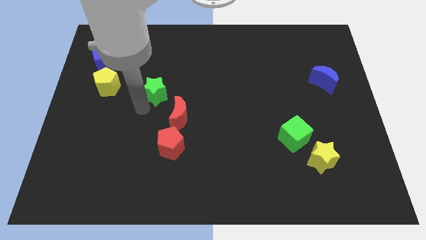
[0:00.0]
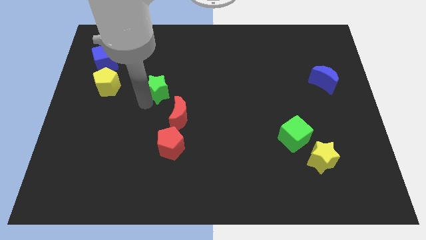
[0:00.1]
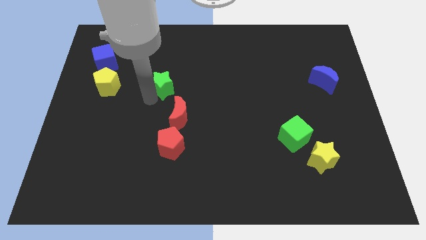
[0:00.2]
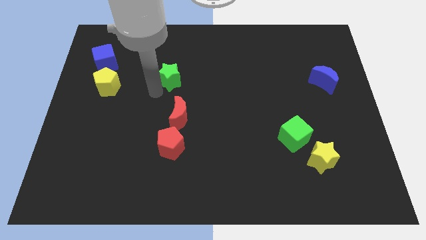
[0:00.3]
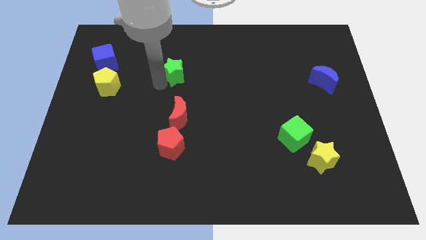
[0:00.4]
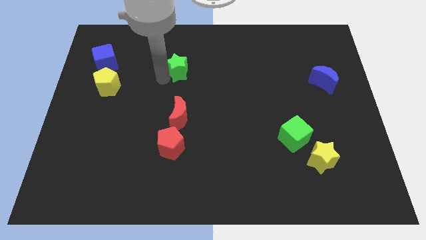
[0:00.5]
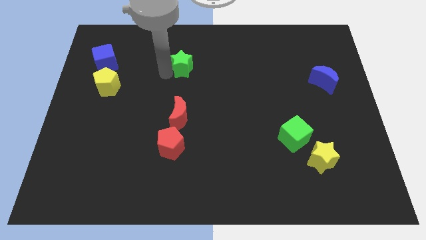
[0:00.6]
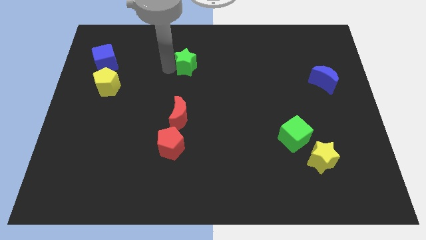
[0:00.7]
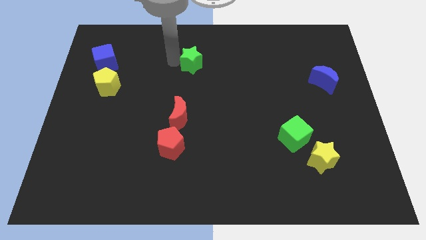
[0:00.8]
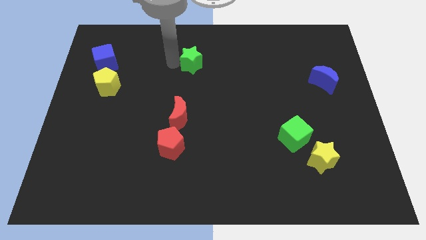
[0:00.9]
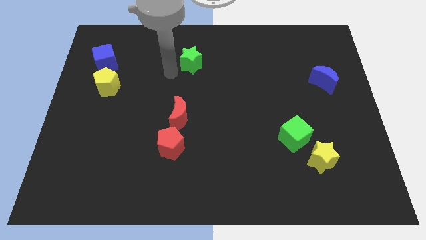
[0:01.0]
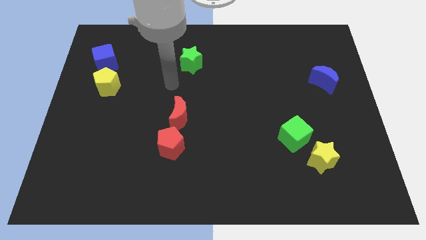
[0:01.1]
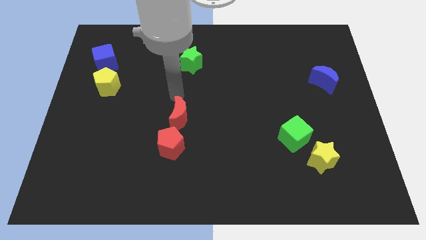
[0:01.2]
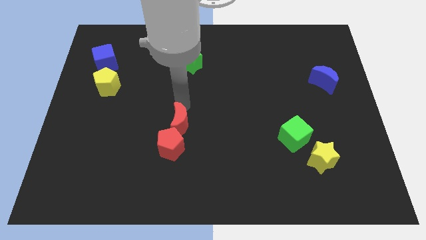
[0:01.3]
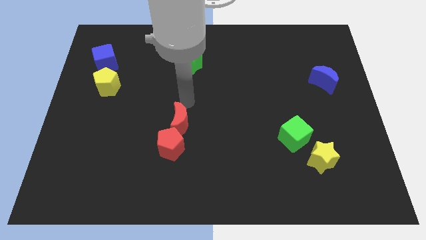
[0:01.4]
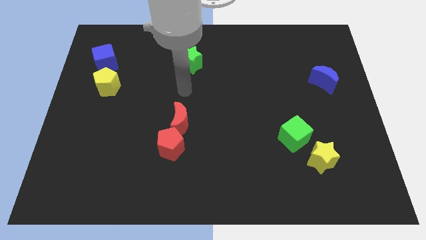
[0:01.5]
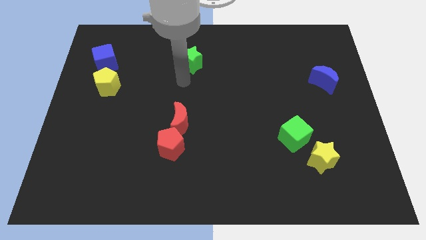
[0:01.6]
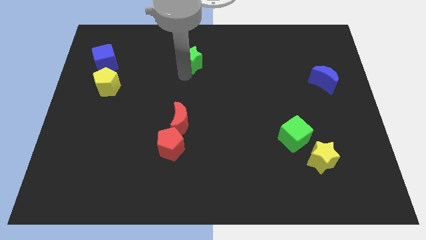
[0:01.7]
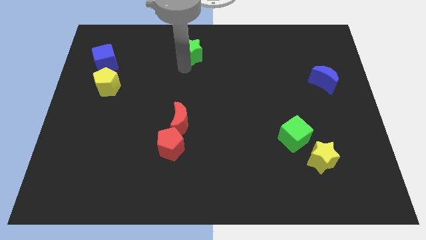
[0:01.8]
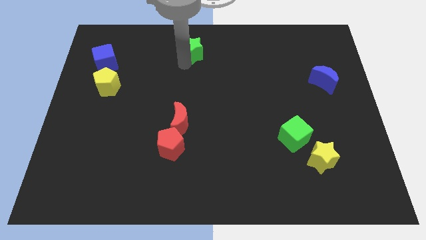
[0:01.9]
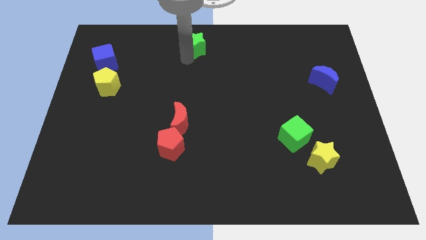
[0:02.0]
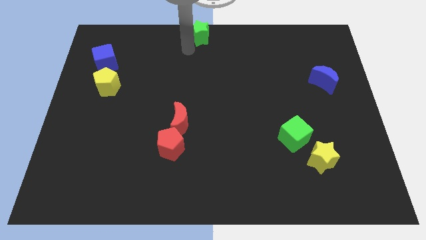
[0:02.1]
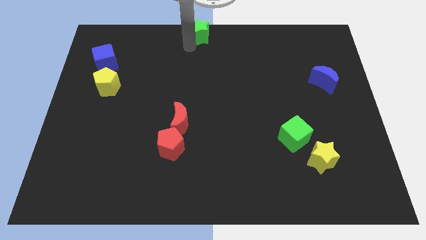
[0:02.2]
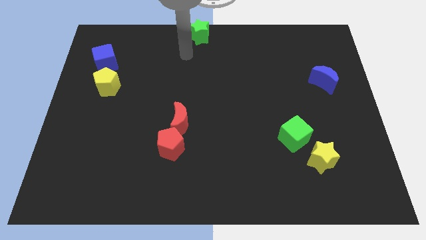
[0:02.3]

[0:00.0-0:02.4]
move the green star to the top center of the board

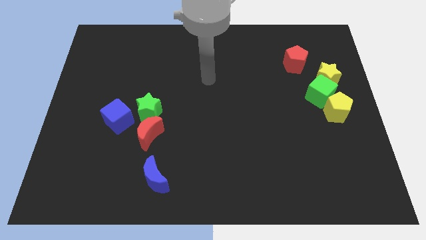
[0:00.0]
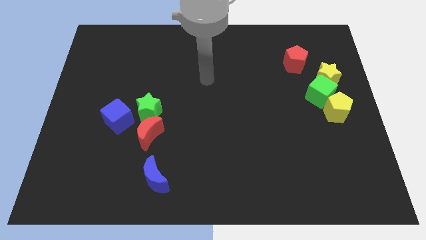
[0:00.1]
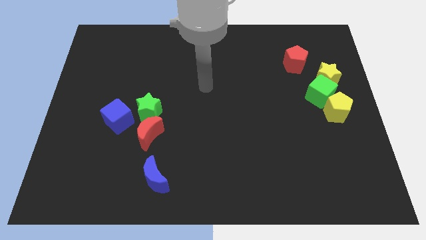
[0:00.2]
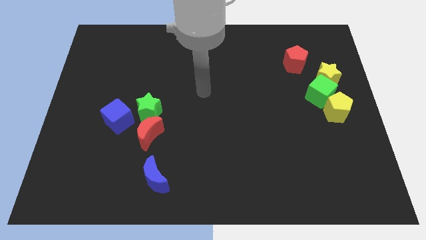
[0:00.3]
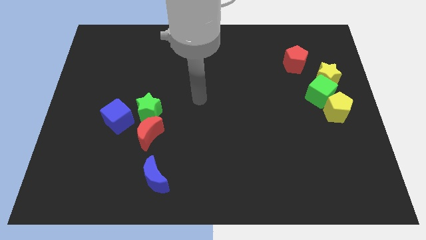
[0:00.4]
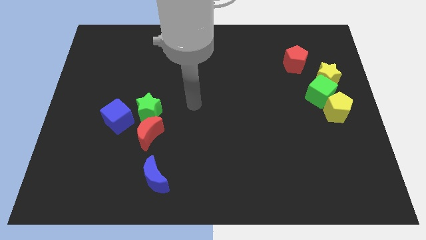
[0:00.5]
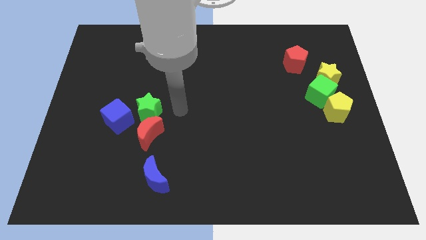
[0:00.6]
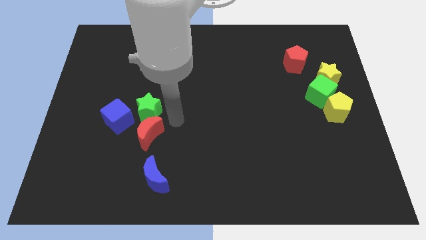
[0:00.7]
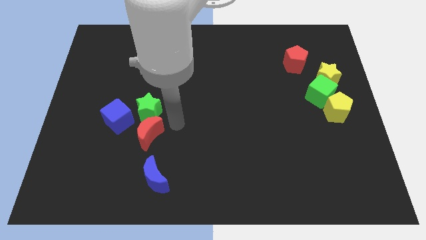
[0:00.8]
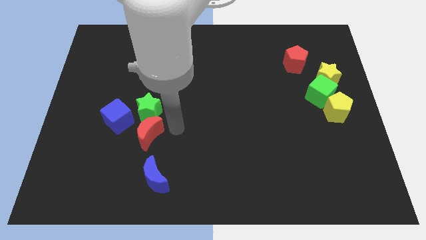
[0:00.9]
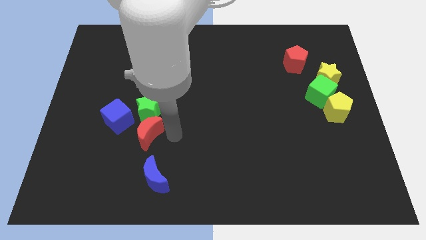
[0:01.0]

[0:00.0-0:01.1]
place your arm to the right of the red crescent

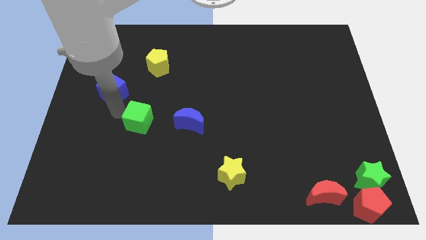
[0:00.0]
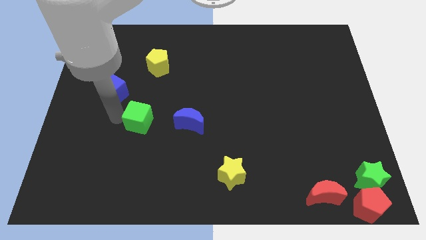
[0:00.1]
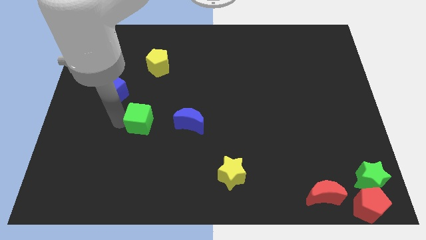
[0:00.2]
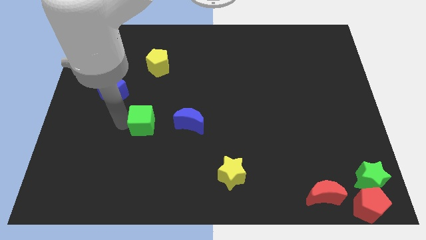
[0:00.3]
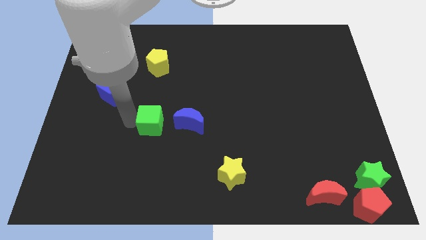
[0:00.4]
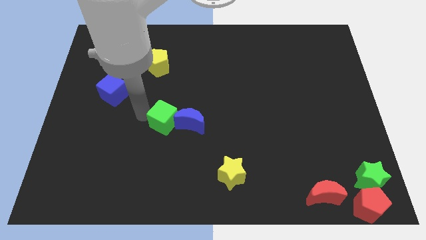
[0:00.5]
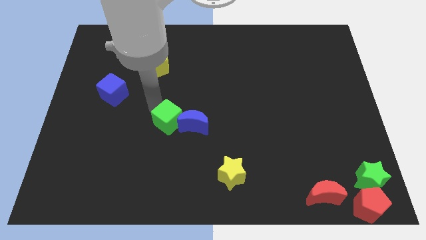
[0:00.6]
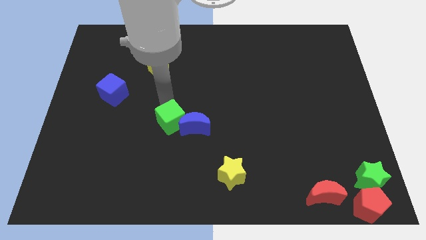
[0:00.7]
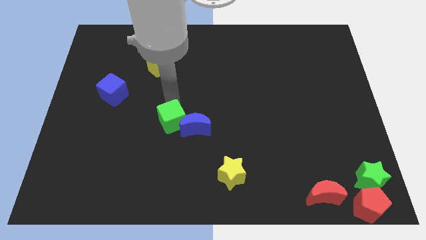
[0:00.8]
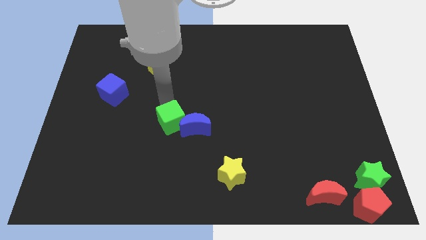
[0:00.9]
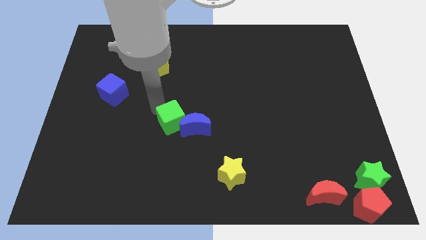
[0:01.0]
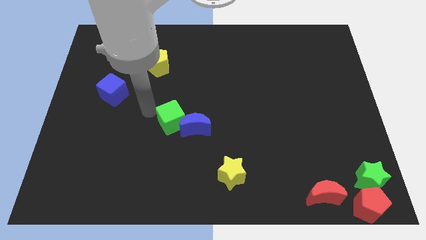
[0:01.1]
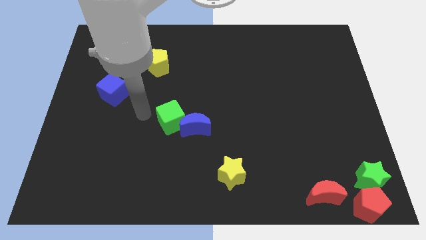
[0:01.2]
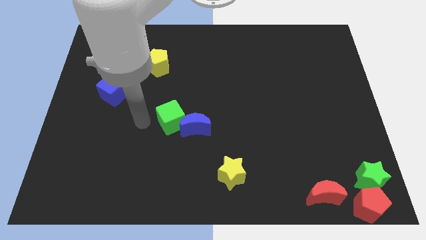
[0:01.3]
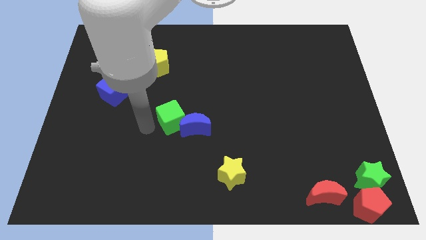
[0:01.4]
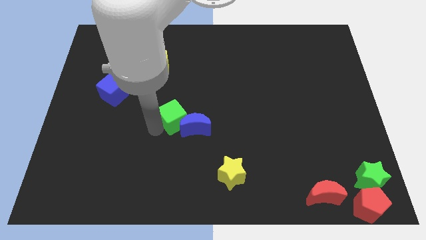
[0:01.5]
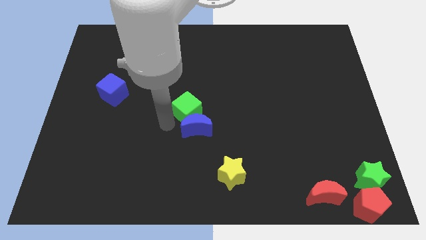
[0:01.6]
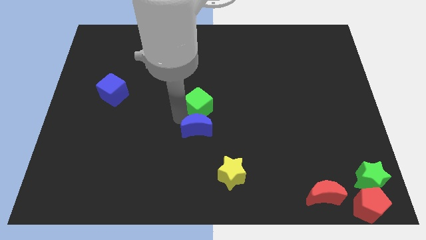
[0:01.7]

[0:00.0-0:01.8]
place green cube into blue crescent

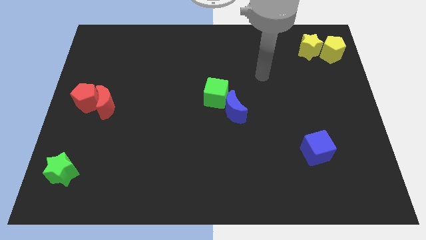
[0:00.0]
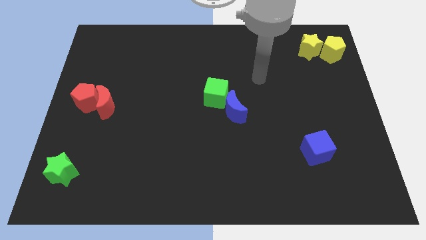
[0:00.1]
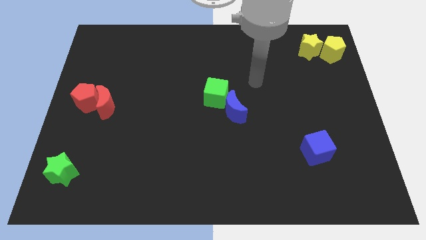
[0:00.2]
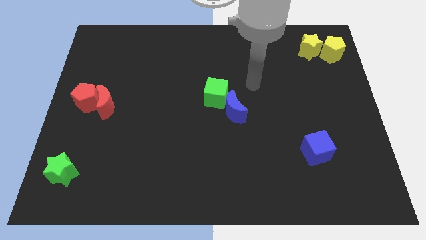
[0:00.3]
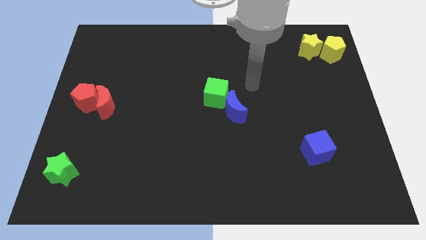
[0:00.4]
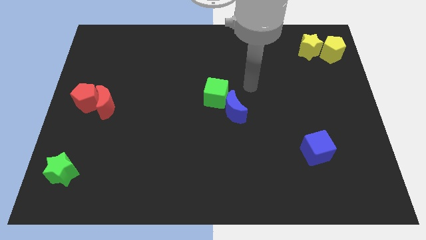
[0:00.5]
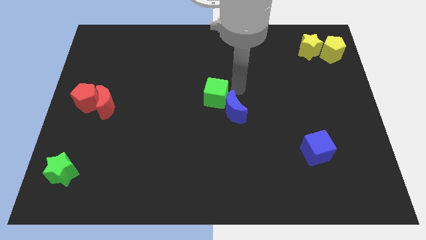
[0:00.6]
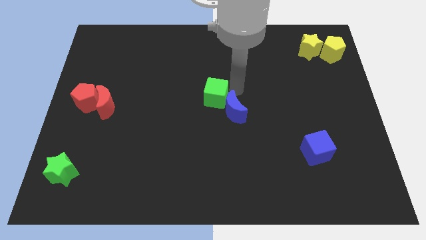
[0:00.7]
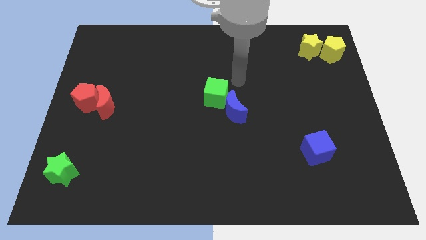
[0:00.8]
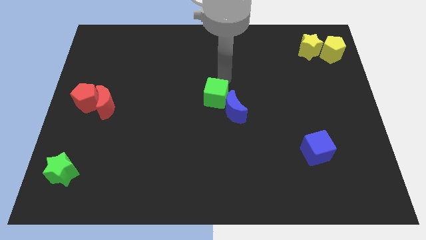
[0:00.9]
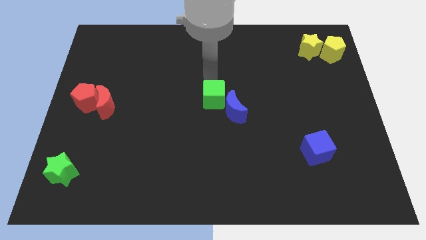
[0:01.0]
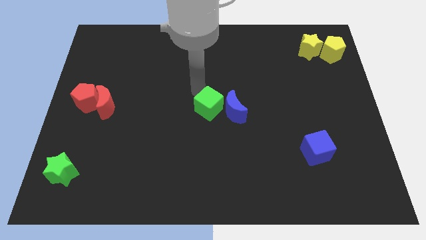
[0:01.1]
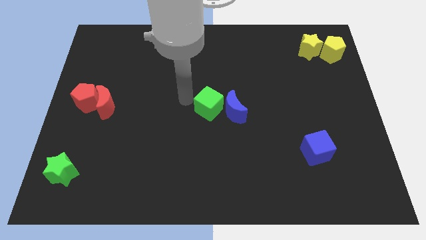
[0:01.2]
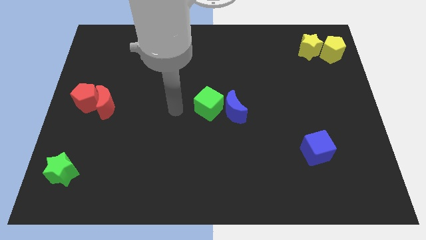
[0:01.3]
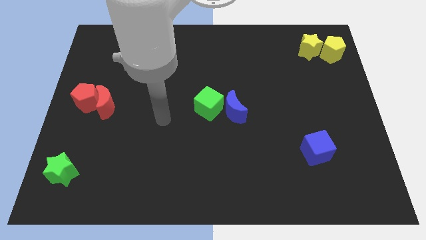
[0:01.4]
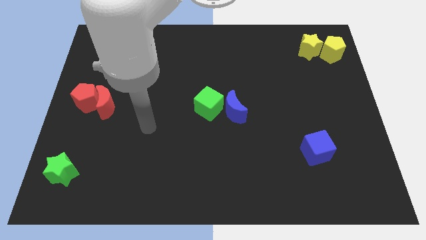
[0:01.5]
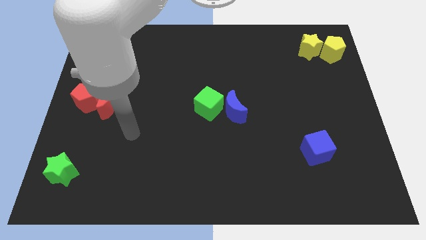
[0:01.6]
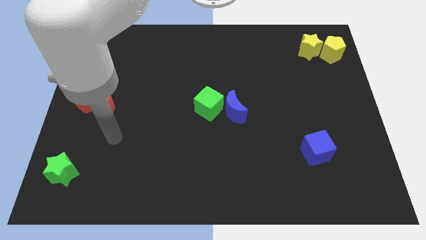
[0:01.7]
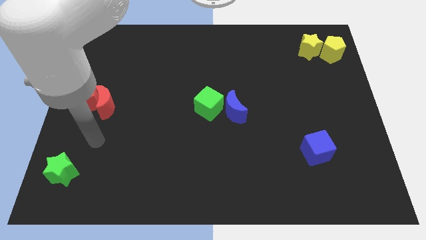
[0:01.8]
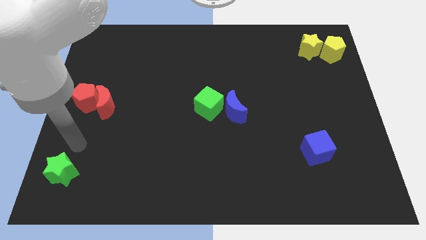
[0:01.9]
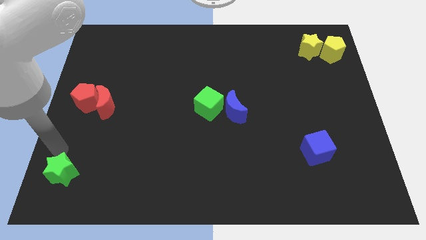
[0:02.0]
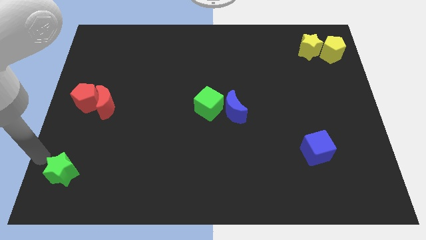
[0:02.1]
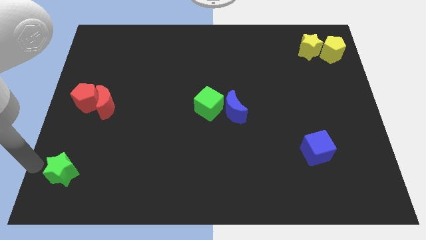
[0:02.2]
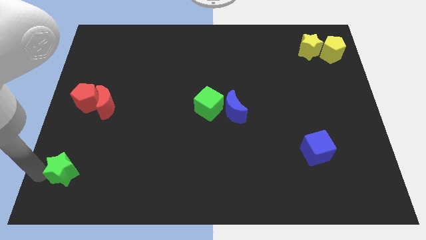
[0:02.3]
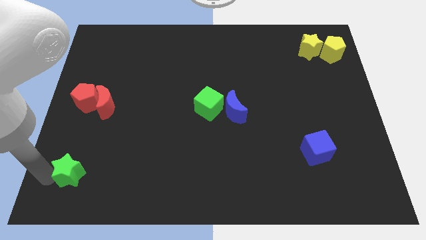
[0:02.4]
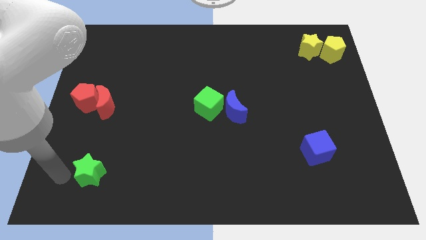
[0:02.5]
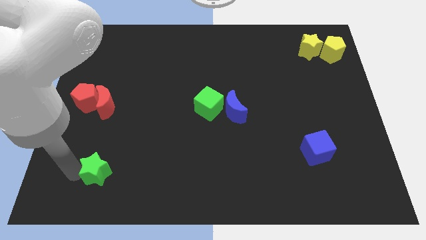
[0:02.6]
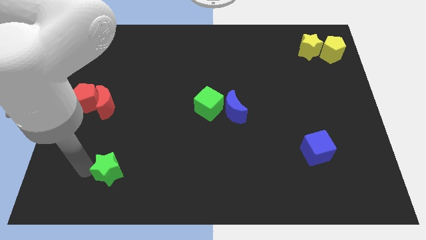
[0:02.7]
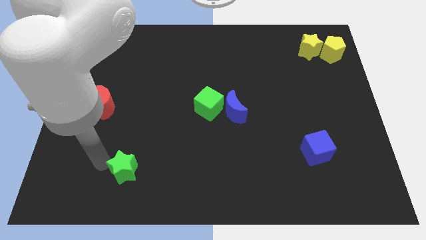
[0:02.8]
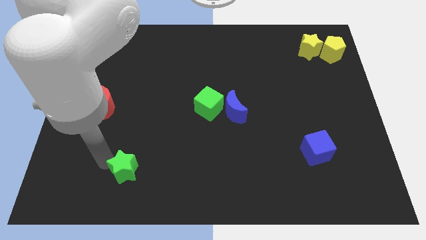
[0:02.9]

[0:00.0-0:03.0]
drag green star diagonally upwards

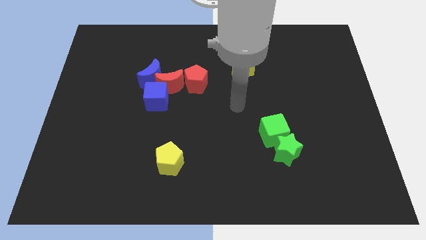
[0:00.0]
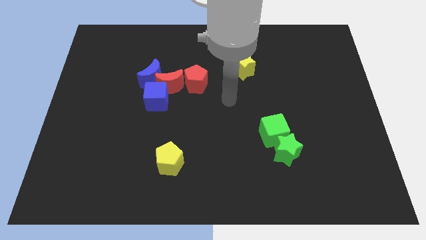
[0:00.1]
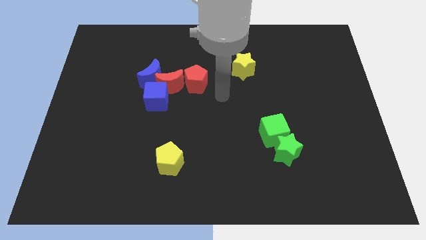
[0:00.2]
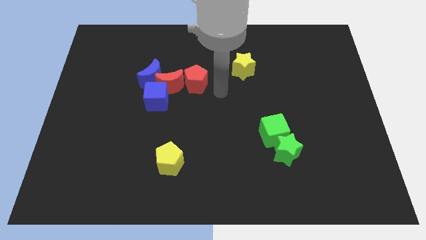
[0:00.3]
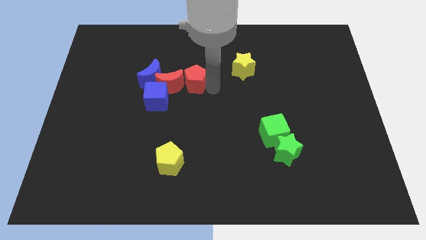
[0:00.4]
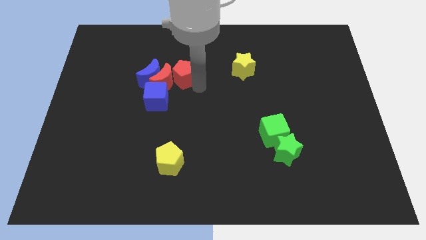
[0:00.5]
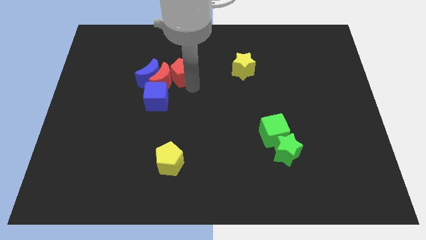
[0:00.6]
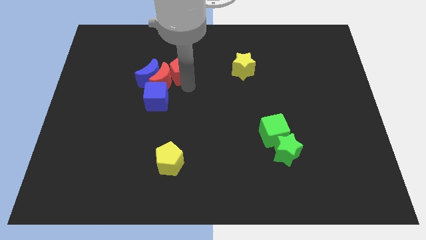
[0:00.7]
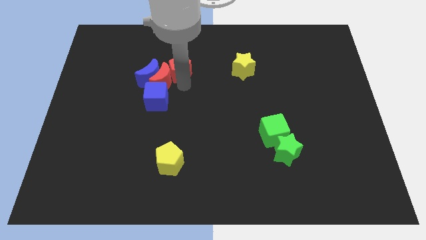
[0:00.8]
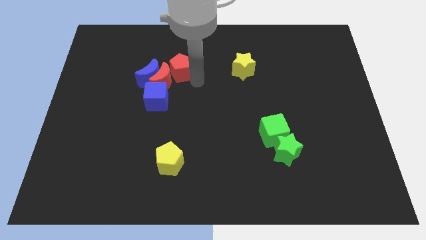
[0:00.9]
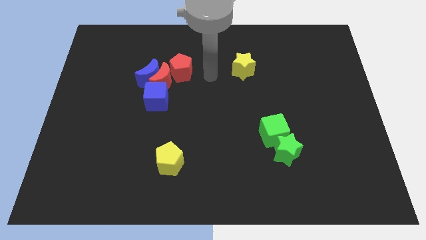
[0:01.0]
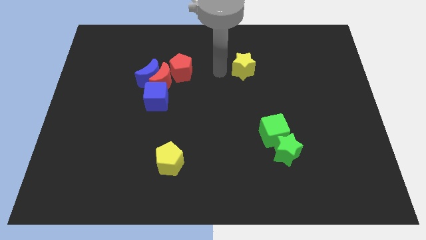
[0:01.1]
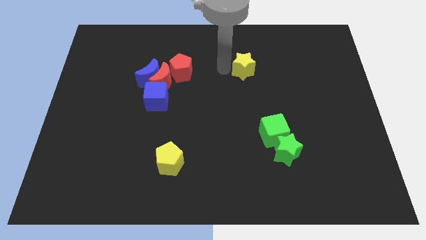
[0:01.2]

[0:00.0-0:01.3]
move red pentagon parallel to the yellow star
